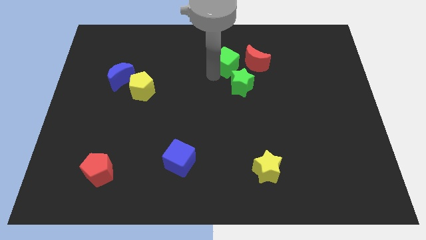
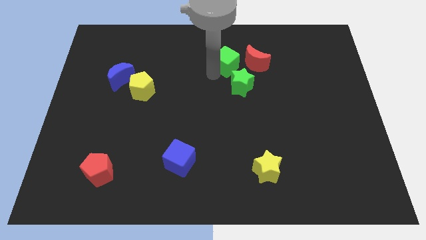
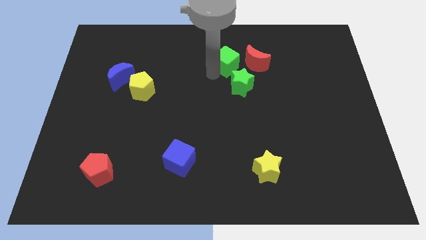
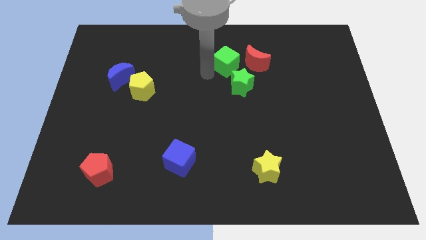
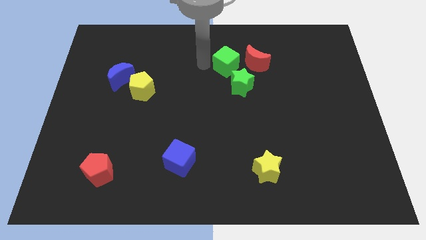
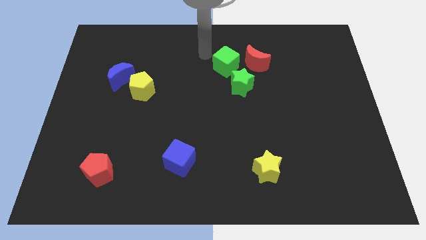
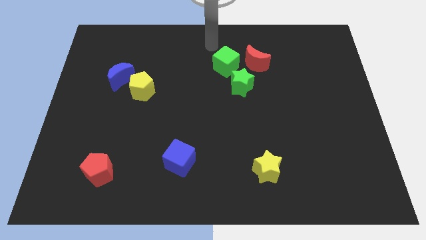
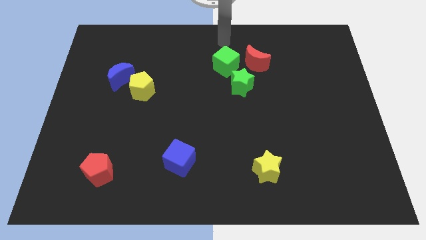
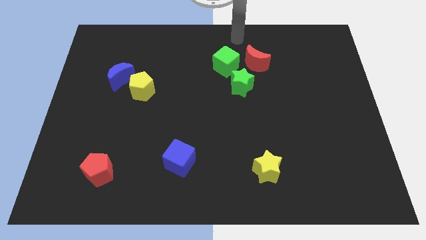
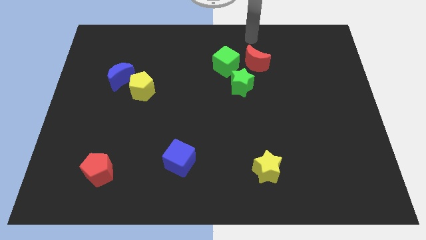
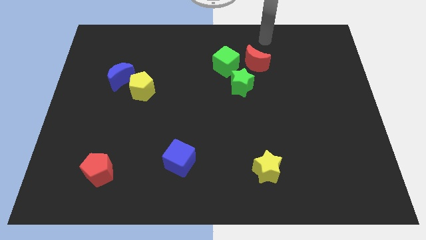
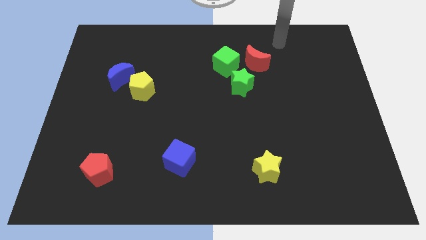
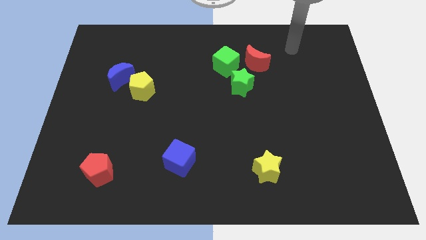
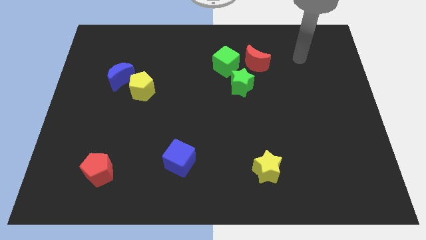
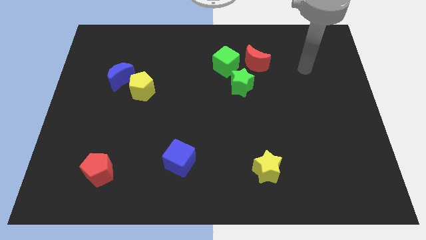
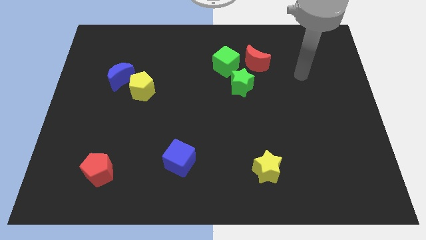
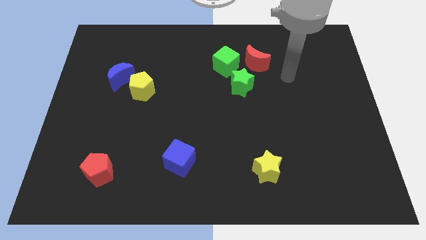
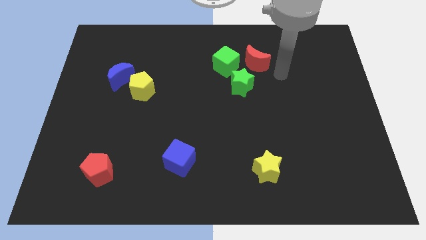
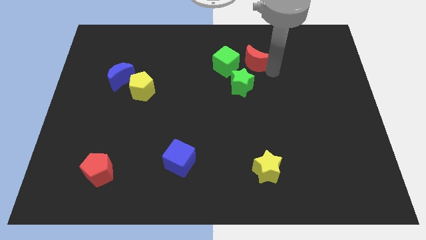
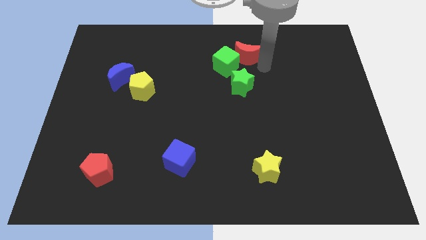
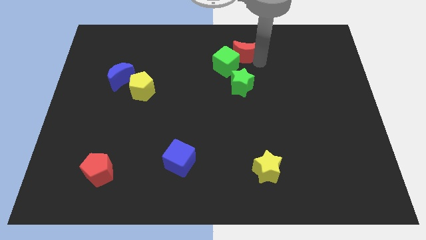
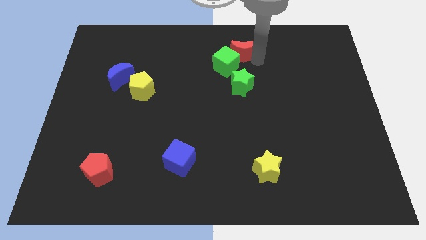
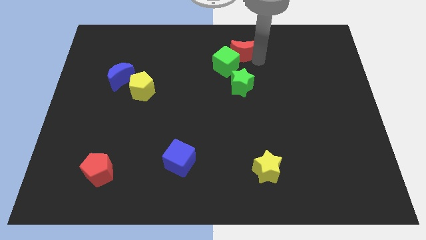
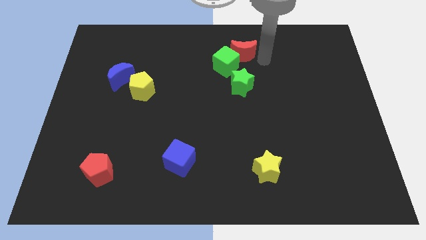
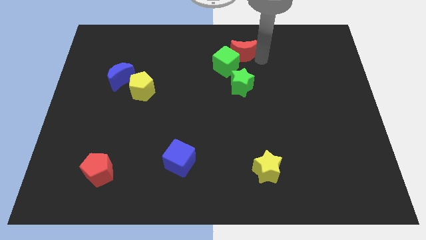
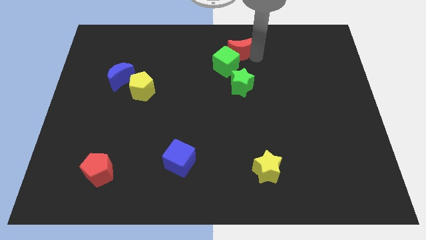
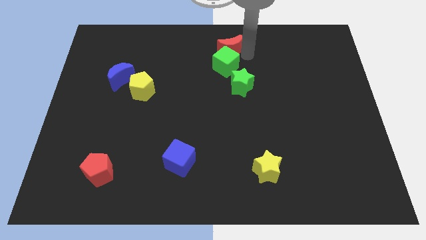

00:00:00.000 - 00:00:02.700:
move the red moon to the top of the green cube

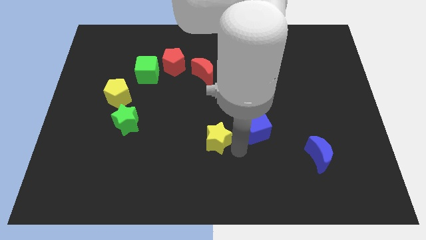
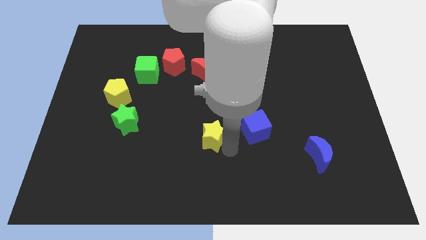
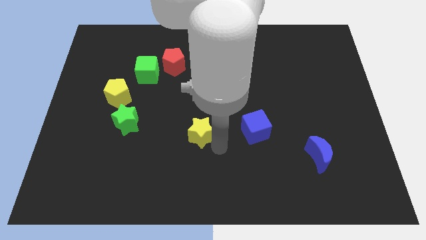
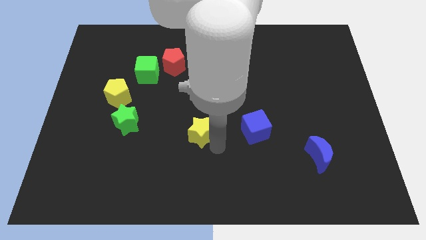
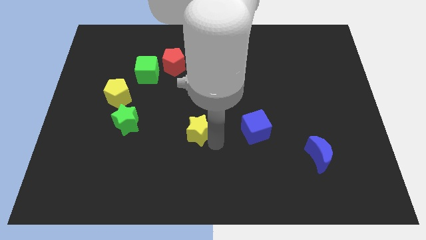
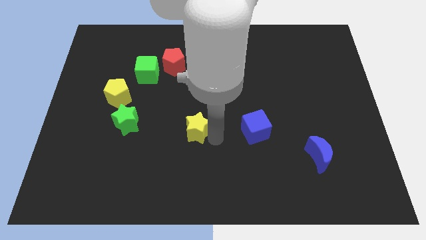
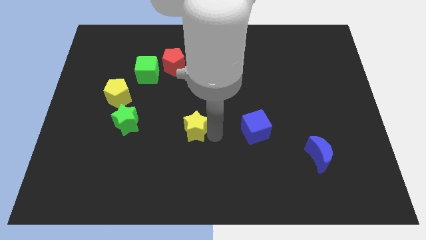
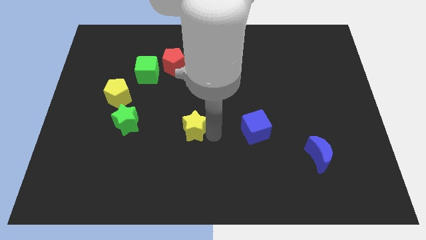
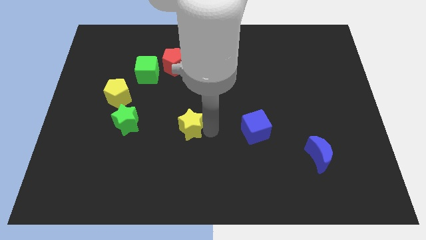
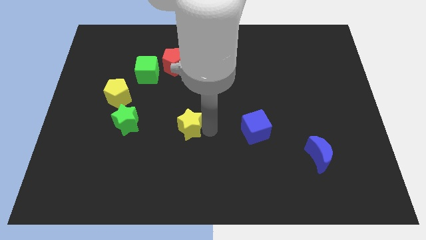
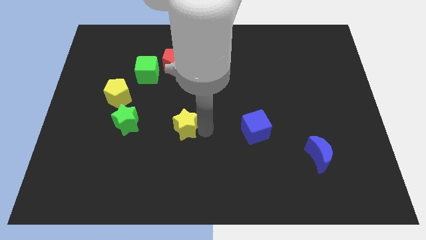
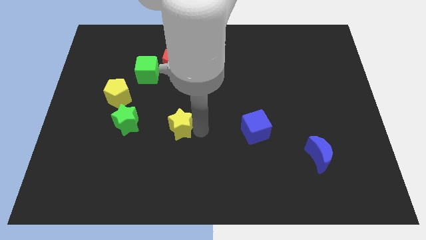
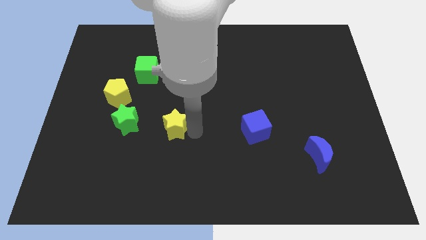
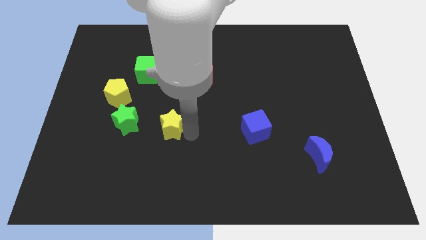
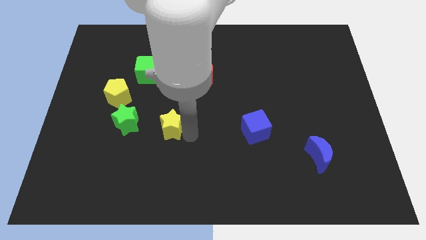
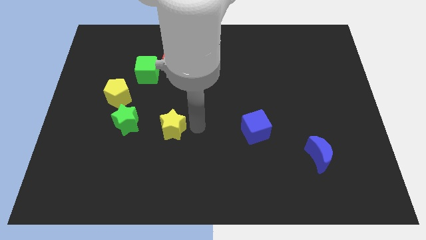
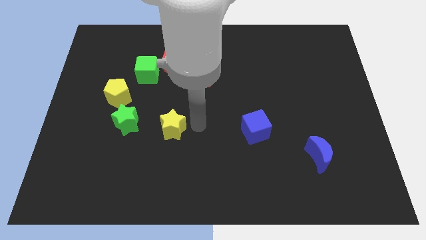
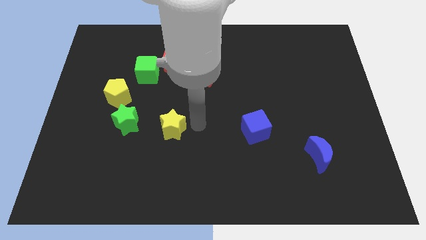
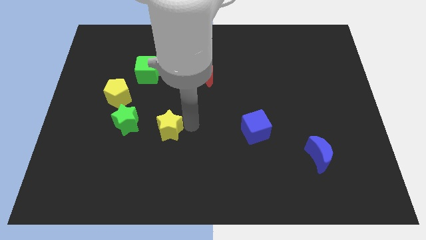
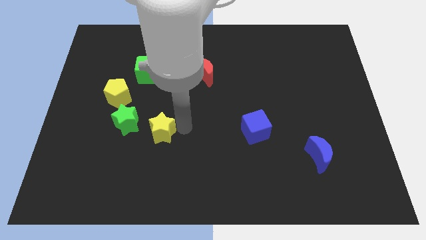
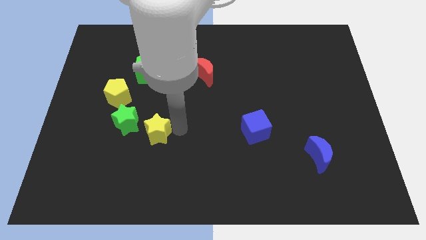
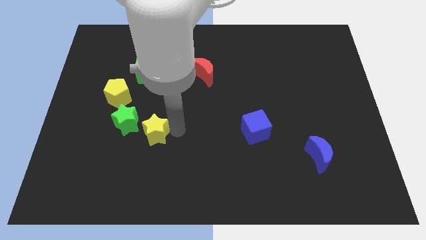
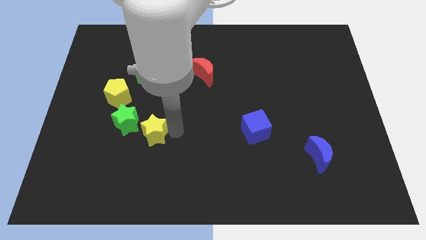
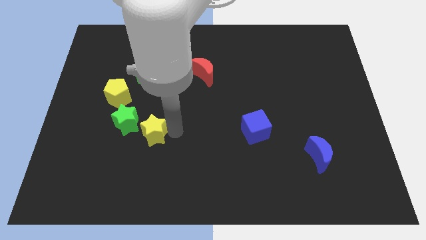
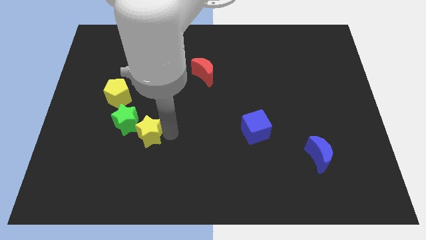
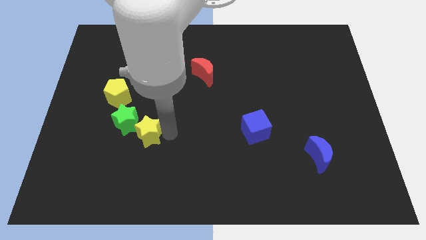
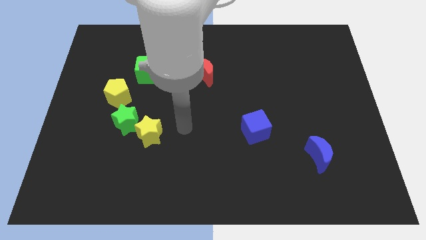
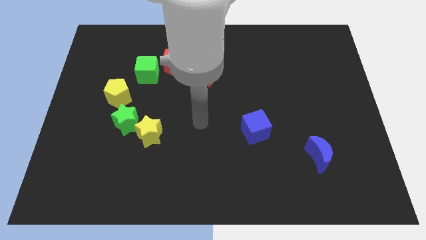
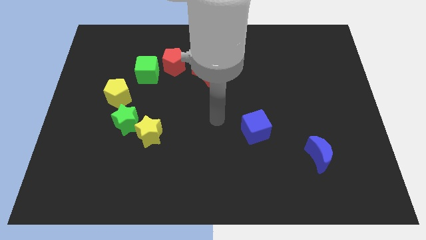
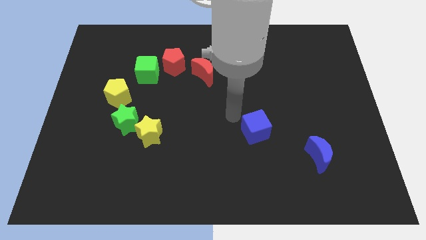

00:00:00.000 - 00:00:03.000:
move the yellow star to the bottom right of the green star

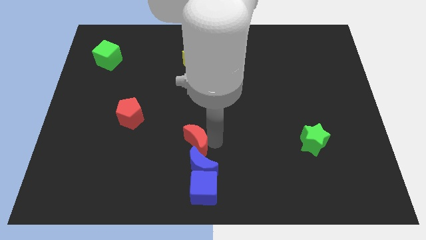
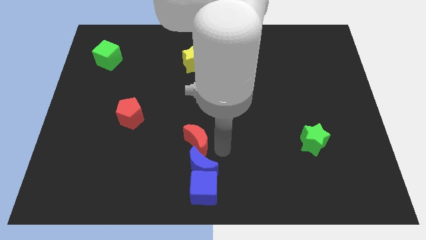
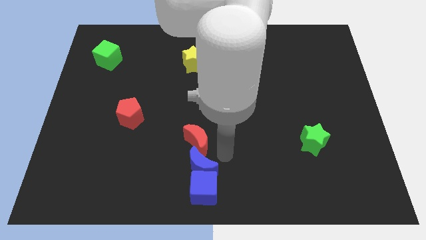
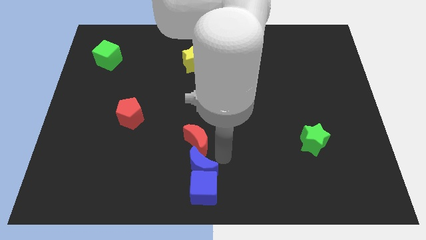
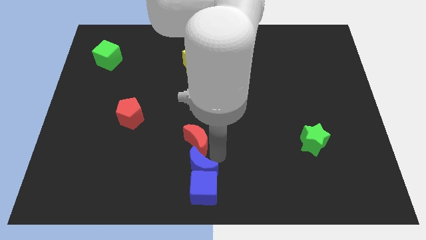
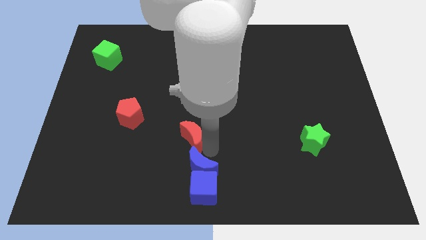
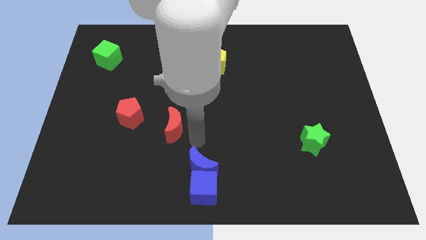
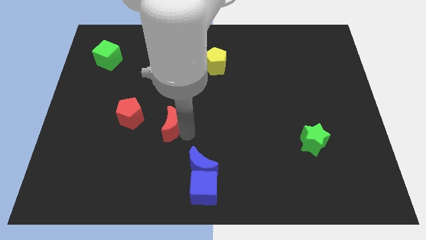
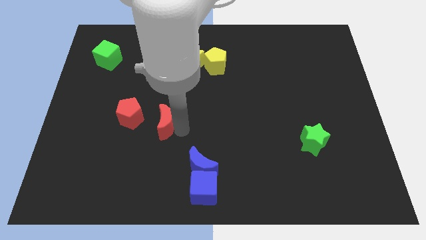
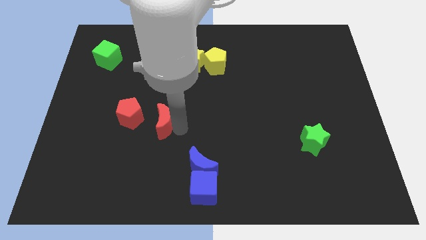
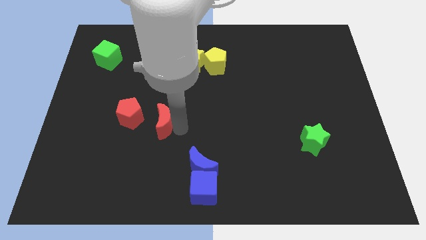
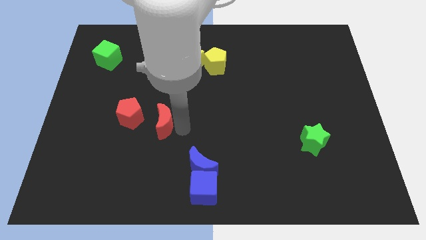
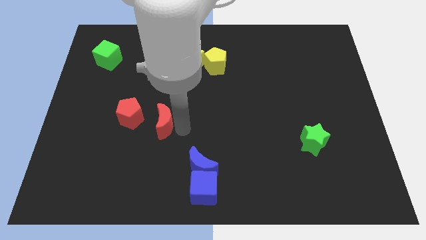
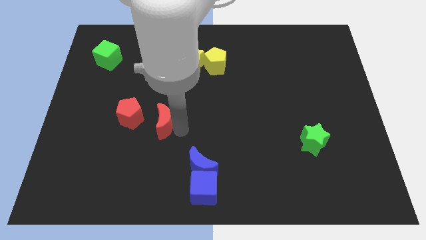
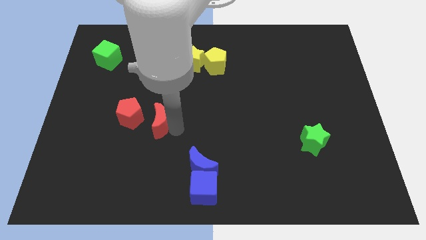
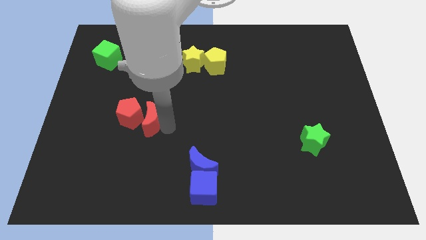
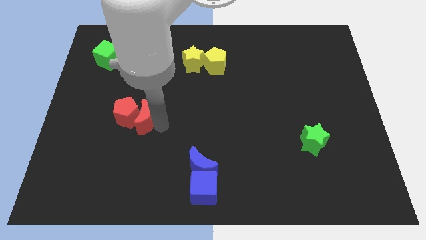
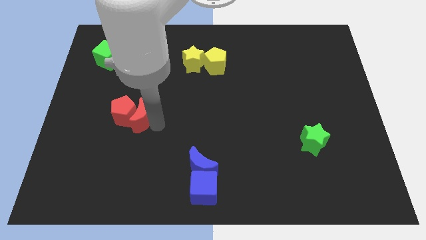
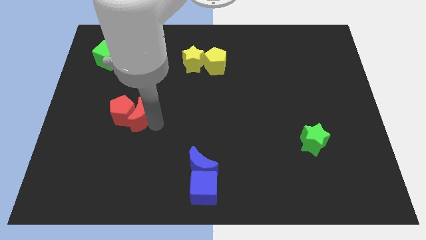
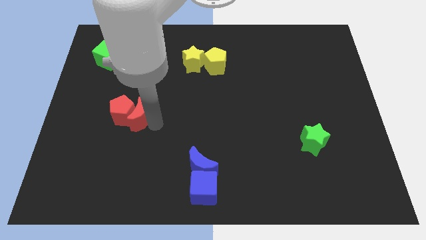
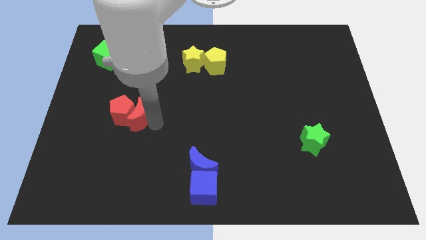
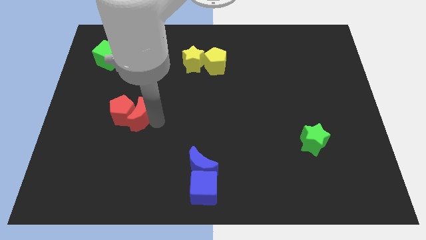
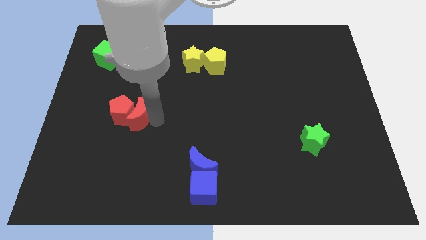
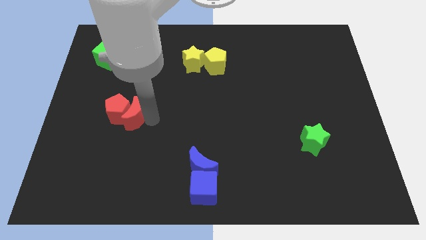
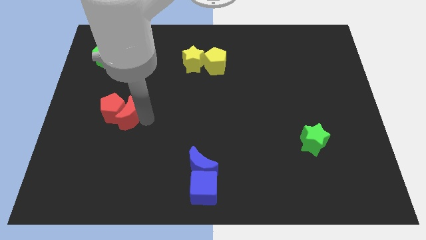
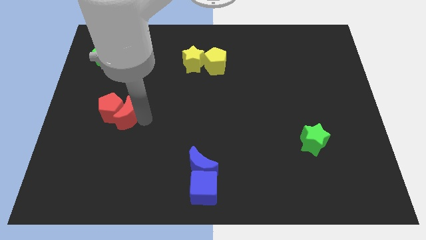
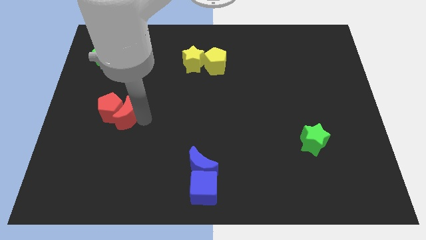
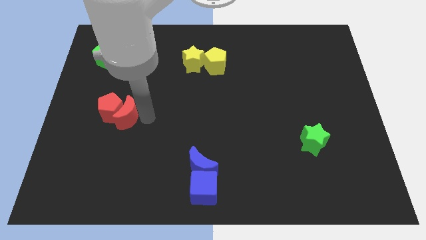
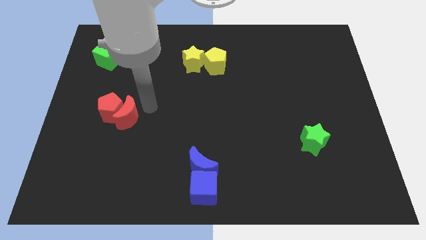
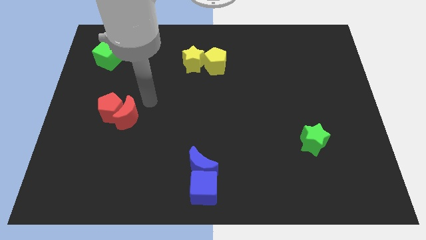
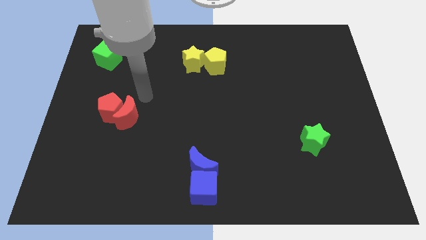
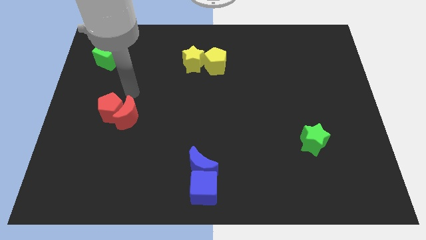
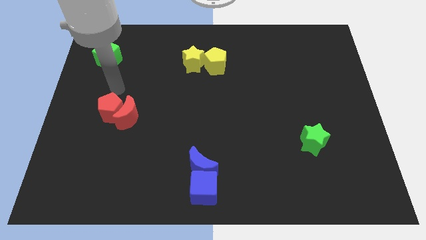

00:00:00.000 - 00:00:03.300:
push the red crescent into red pentagon
